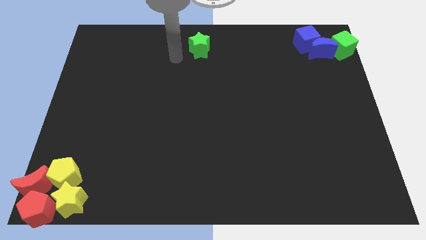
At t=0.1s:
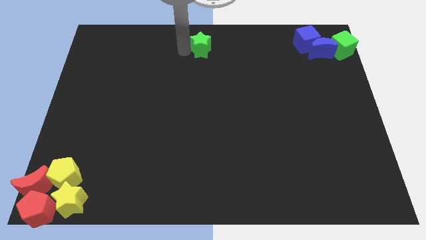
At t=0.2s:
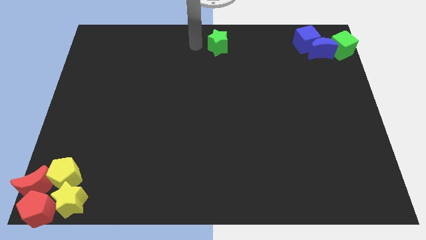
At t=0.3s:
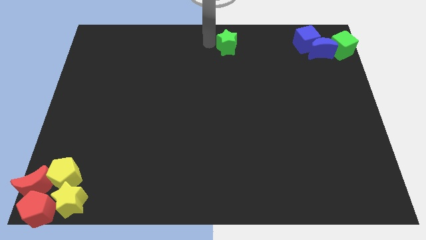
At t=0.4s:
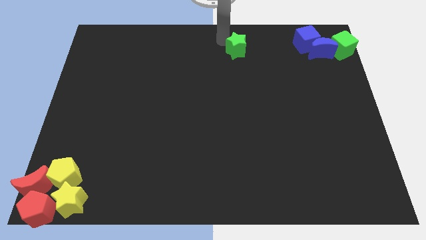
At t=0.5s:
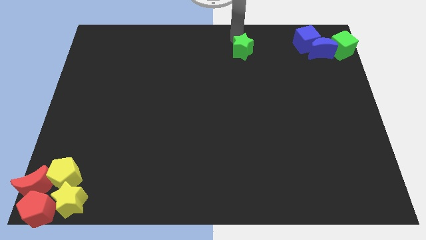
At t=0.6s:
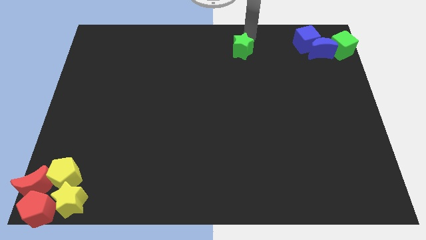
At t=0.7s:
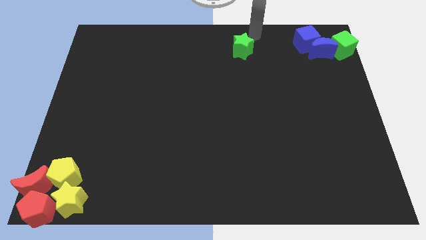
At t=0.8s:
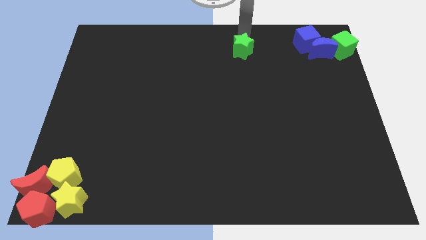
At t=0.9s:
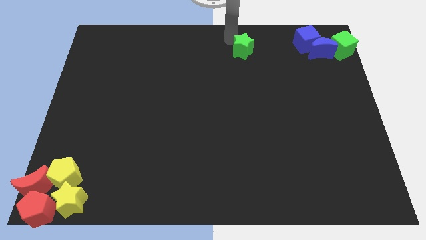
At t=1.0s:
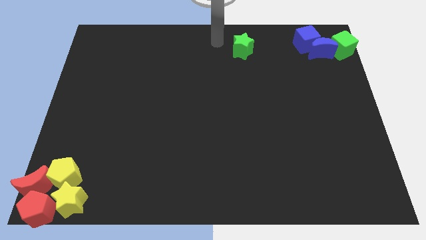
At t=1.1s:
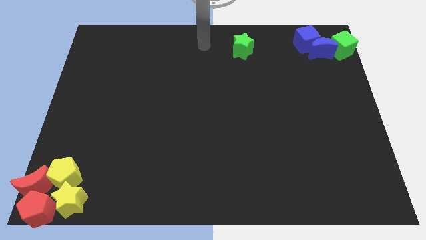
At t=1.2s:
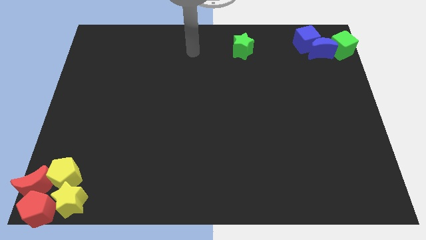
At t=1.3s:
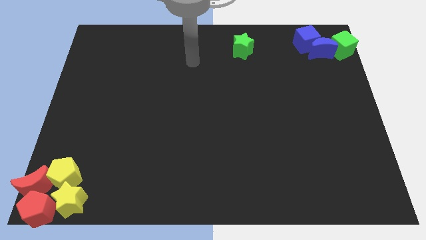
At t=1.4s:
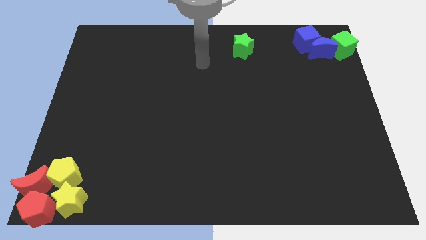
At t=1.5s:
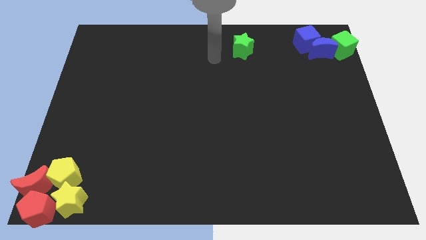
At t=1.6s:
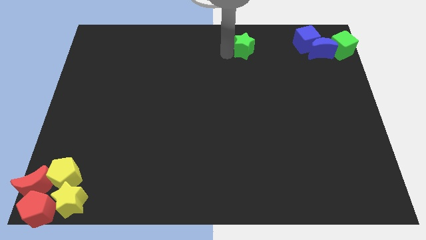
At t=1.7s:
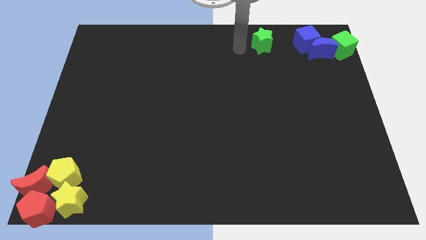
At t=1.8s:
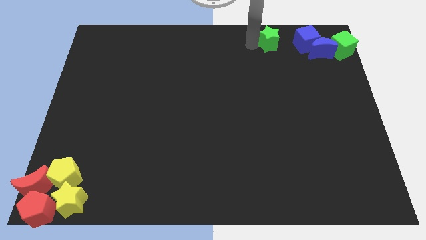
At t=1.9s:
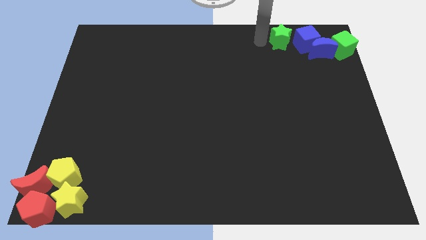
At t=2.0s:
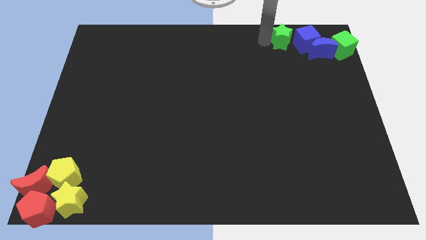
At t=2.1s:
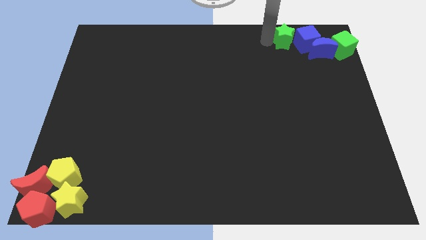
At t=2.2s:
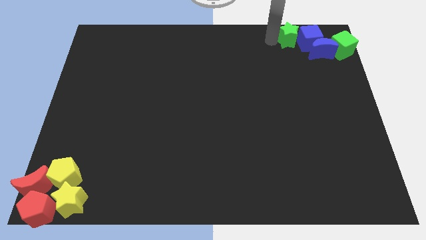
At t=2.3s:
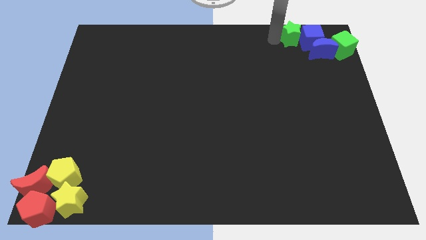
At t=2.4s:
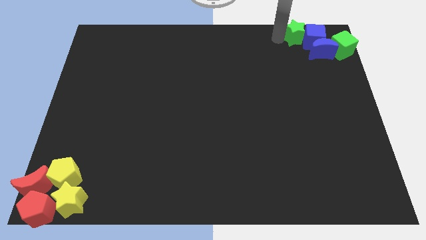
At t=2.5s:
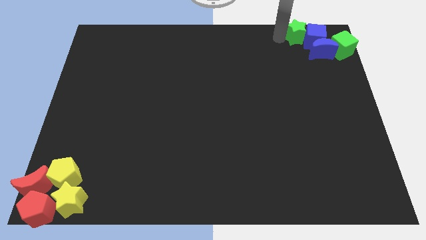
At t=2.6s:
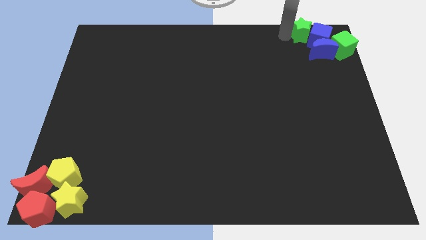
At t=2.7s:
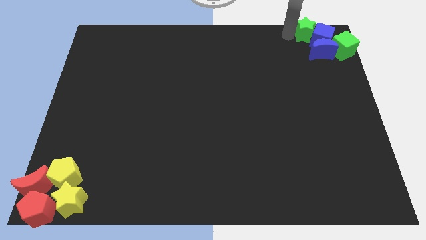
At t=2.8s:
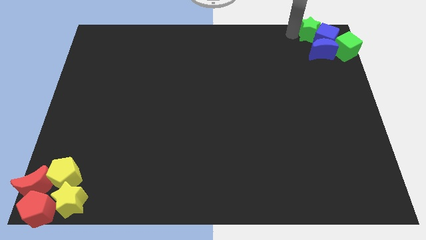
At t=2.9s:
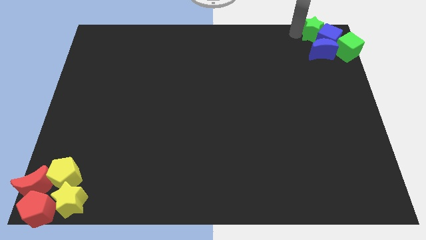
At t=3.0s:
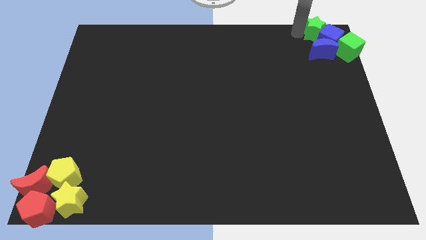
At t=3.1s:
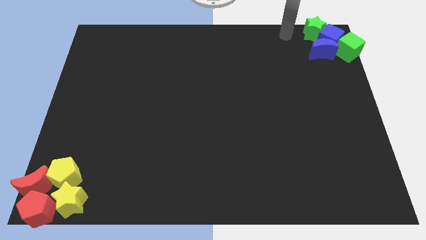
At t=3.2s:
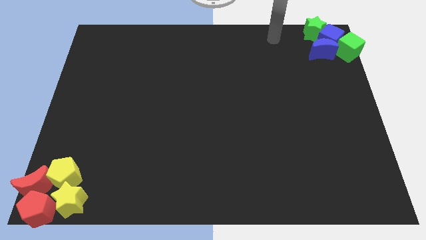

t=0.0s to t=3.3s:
group up the green and blue blocks at top right corner of the board

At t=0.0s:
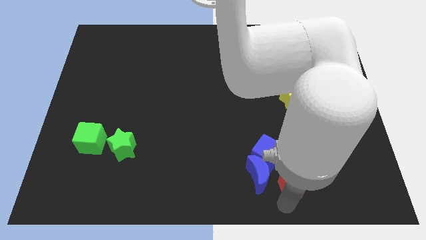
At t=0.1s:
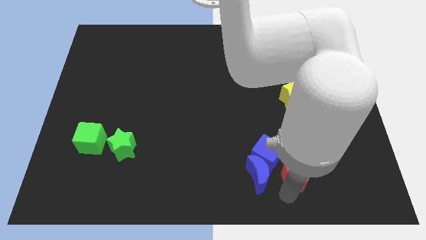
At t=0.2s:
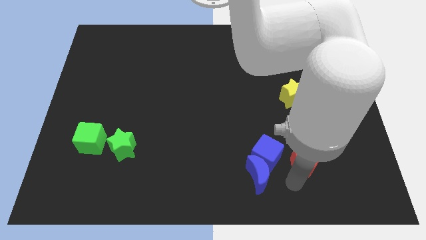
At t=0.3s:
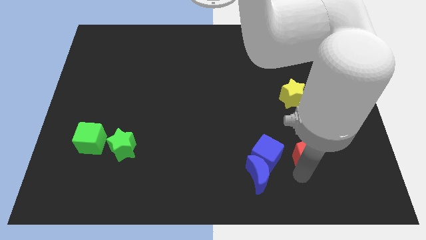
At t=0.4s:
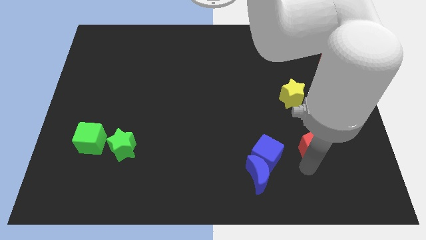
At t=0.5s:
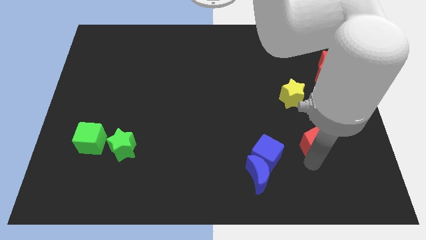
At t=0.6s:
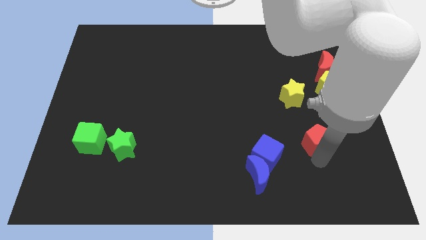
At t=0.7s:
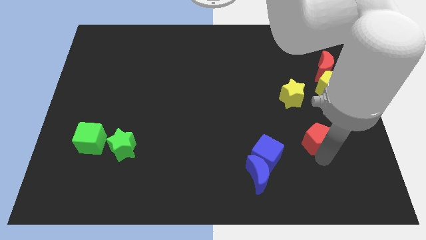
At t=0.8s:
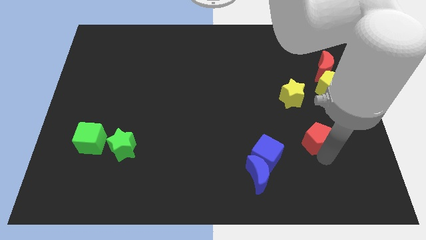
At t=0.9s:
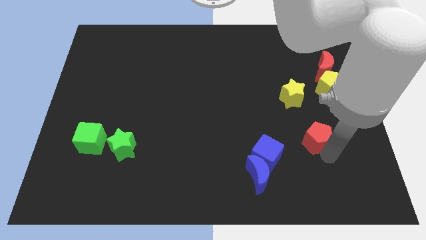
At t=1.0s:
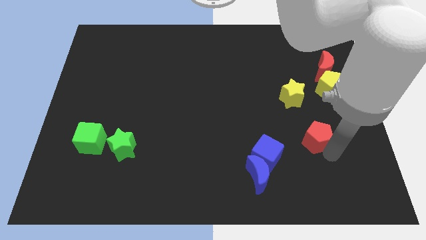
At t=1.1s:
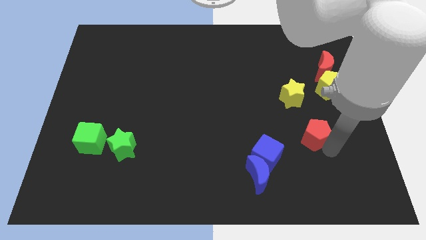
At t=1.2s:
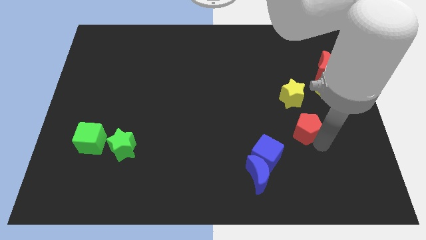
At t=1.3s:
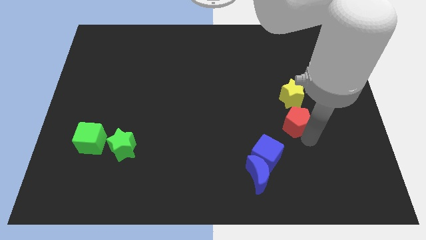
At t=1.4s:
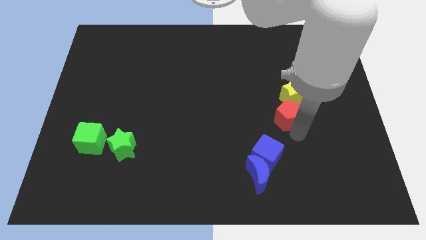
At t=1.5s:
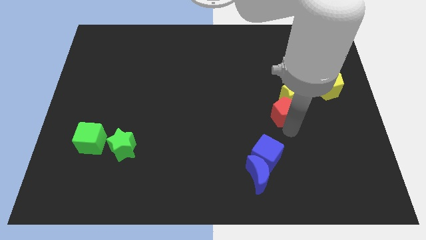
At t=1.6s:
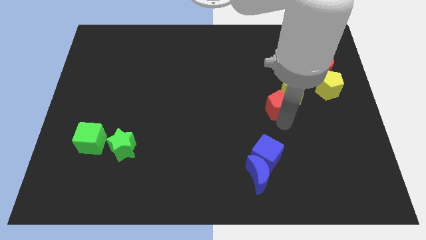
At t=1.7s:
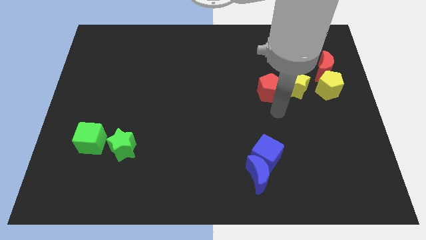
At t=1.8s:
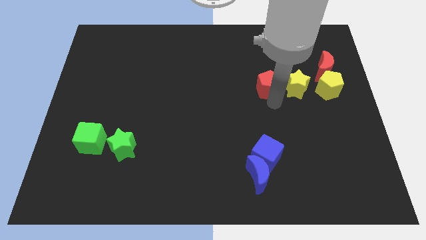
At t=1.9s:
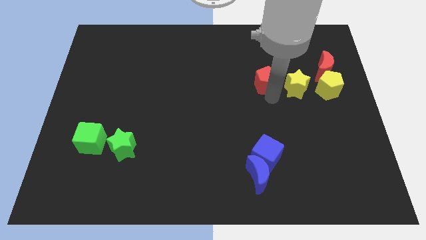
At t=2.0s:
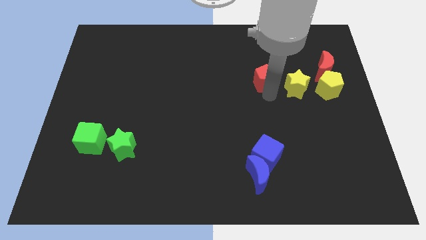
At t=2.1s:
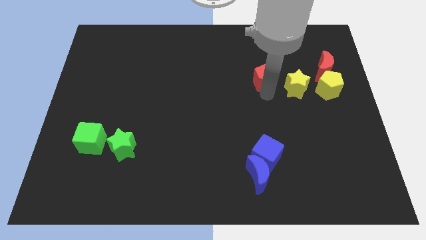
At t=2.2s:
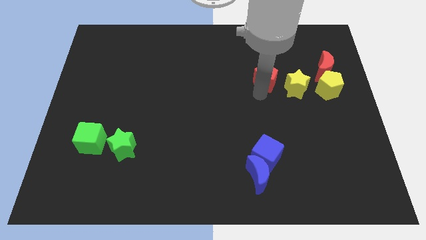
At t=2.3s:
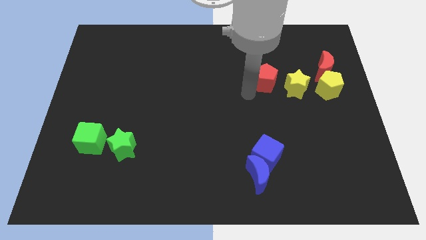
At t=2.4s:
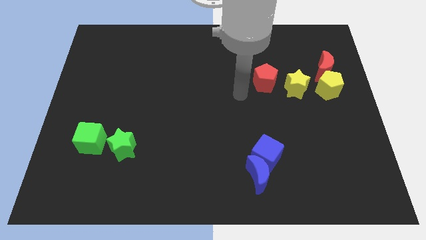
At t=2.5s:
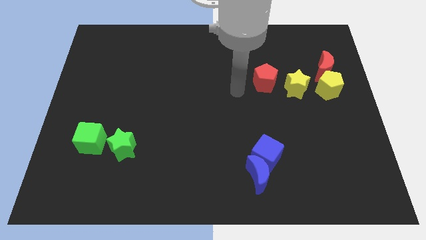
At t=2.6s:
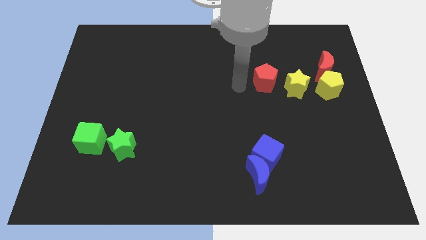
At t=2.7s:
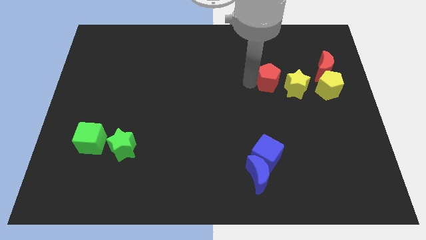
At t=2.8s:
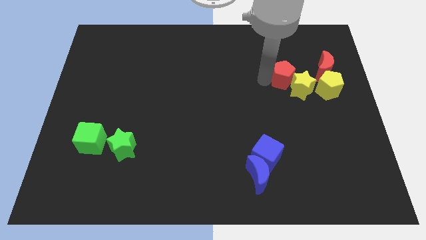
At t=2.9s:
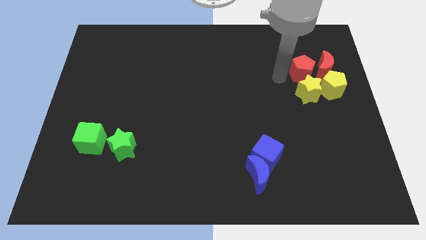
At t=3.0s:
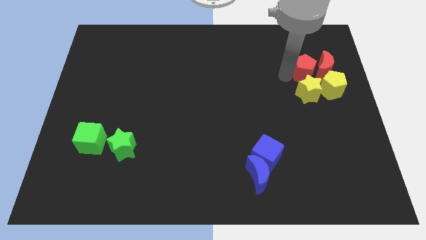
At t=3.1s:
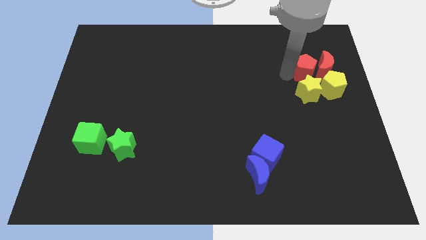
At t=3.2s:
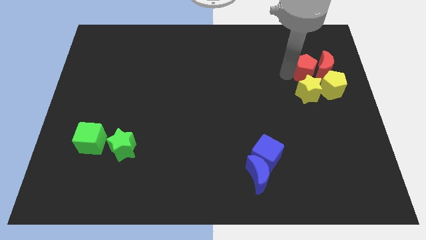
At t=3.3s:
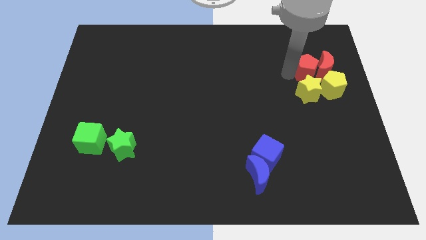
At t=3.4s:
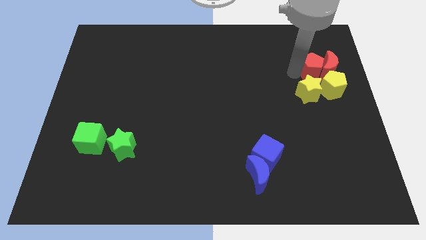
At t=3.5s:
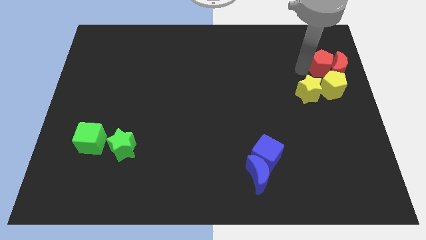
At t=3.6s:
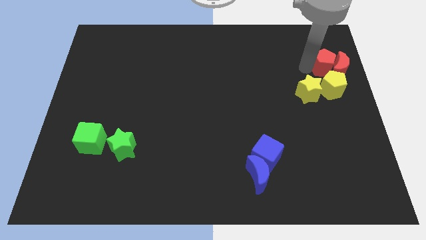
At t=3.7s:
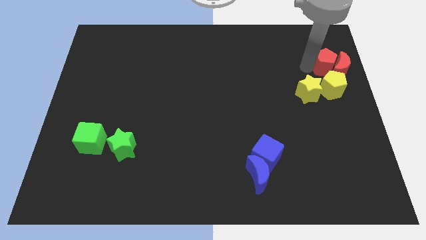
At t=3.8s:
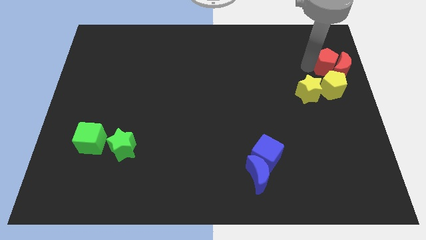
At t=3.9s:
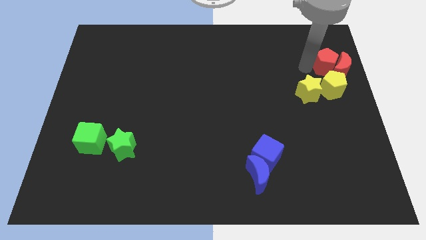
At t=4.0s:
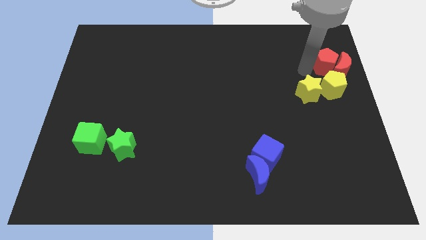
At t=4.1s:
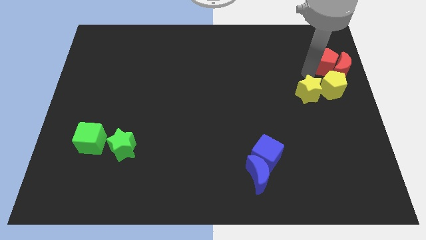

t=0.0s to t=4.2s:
place red pentagon to the top of yellow pentagon

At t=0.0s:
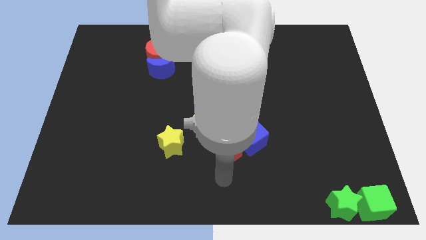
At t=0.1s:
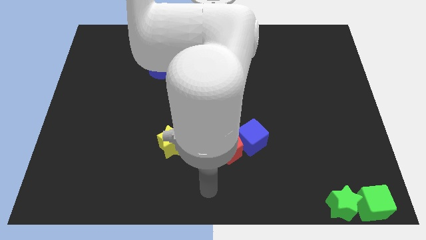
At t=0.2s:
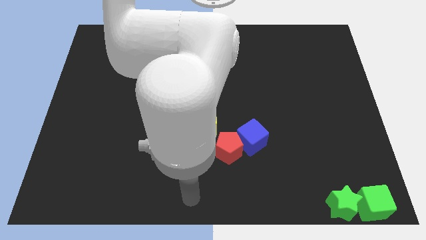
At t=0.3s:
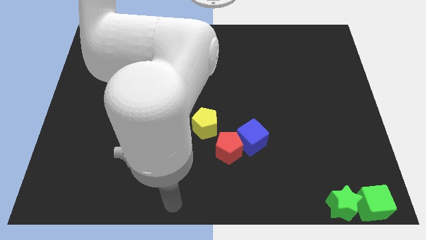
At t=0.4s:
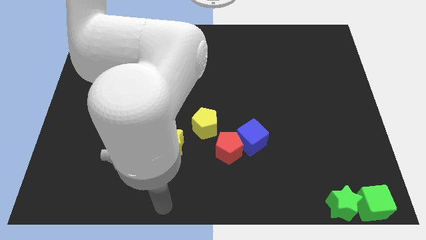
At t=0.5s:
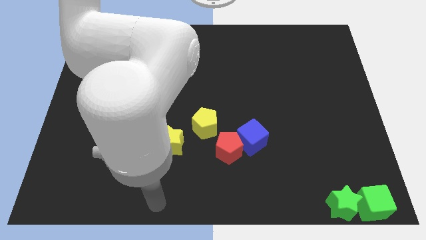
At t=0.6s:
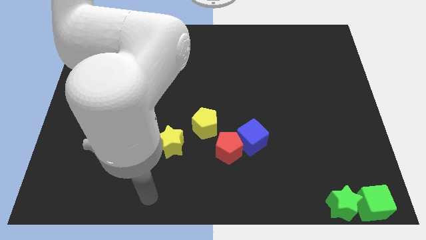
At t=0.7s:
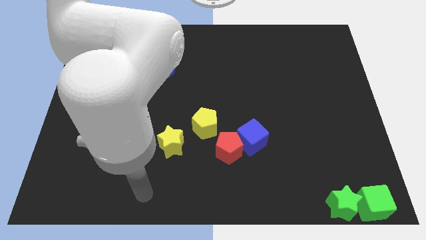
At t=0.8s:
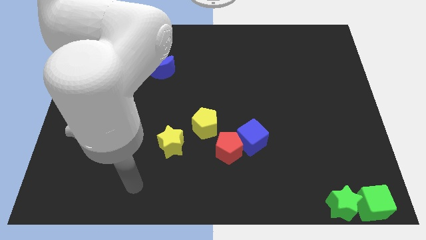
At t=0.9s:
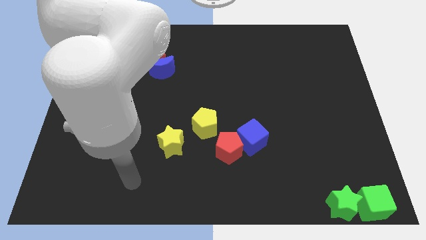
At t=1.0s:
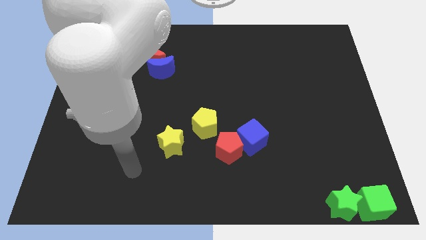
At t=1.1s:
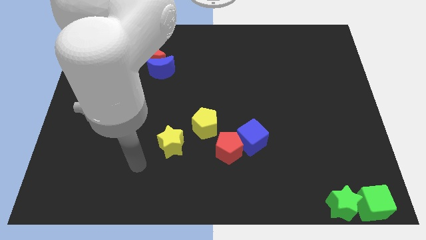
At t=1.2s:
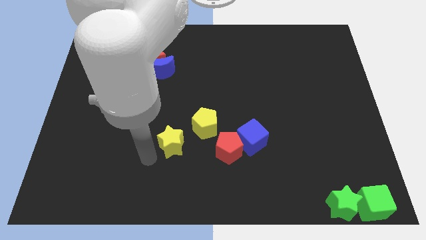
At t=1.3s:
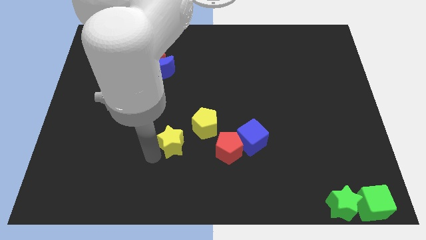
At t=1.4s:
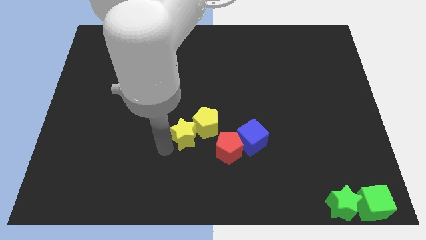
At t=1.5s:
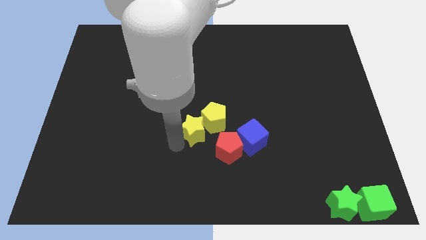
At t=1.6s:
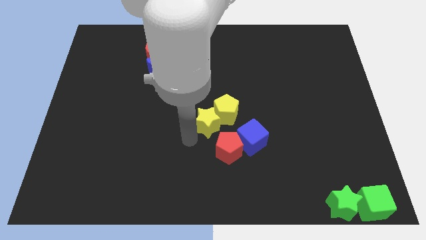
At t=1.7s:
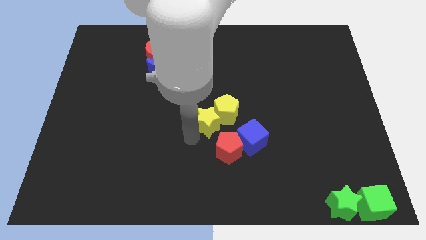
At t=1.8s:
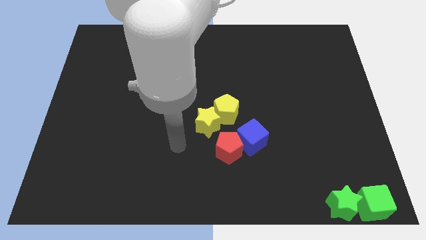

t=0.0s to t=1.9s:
move the yellow star into the yellow pentagon
